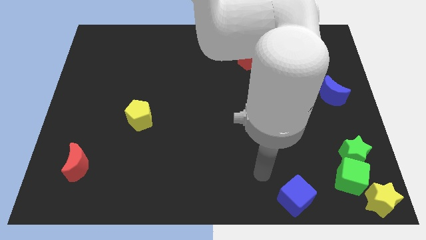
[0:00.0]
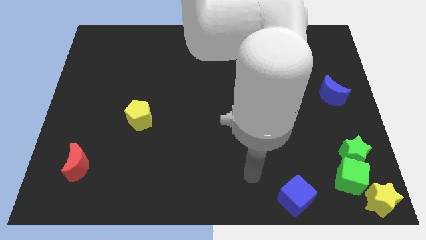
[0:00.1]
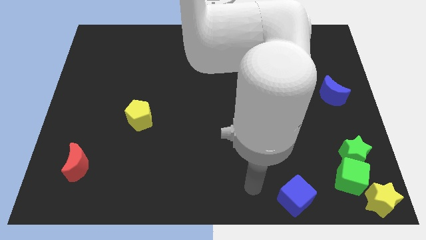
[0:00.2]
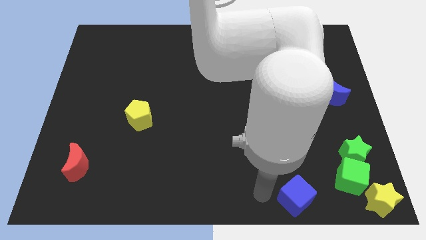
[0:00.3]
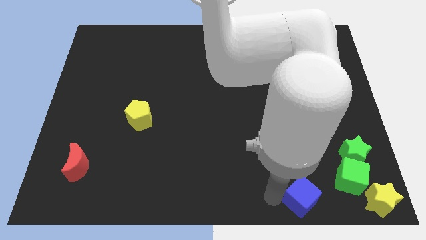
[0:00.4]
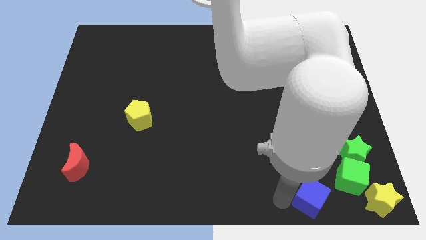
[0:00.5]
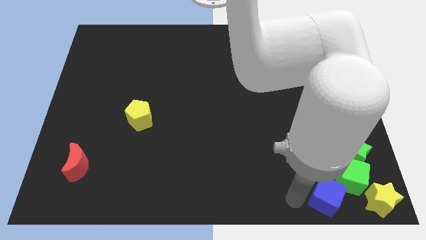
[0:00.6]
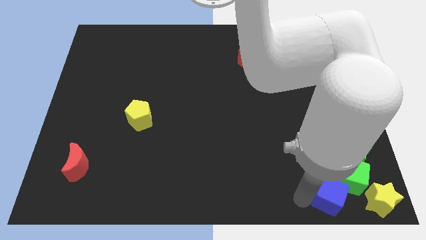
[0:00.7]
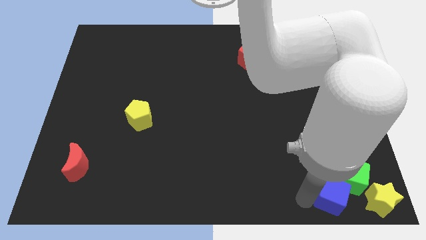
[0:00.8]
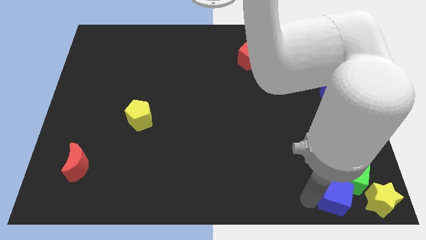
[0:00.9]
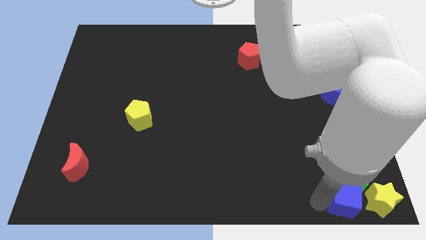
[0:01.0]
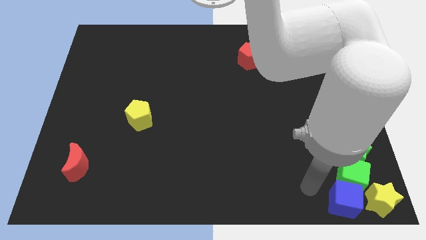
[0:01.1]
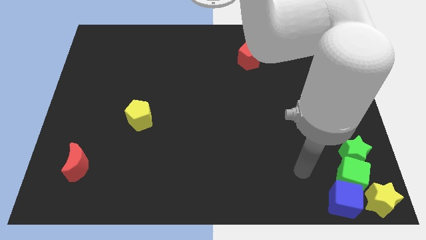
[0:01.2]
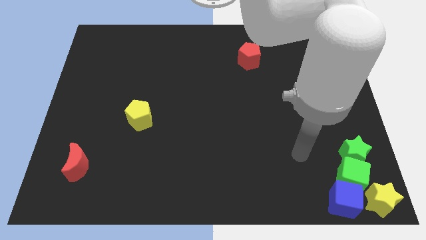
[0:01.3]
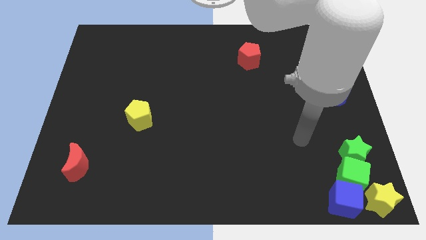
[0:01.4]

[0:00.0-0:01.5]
push the blue block into the group of obbjects

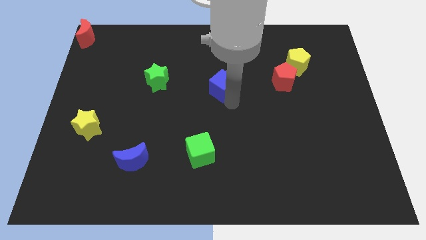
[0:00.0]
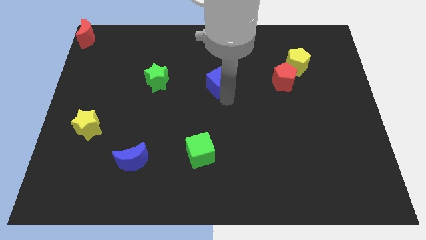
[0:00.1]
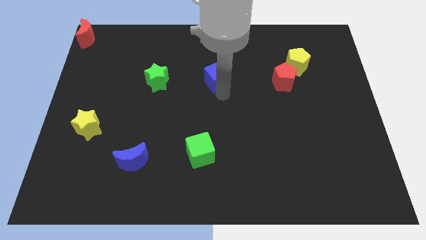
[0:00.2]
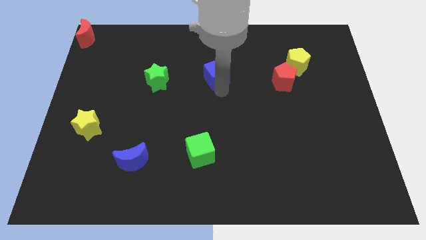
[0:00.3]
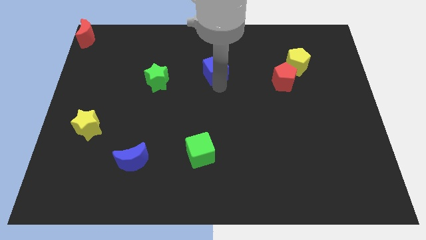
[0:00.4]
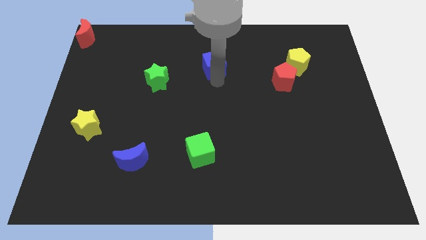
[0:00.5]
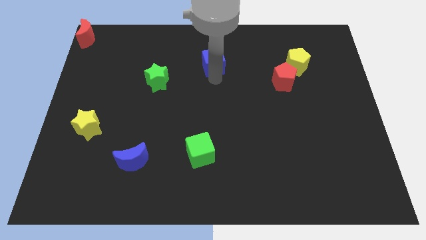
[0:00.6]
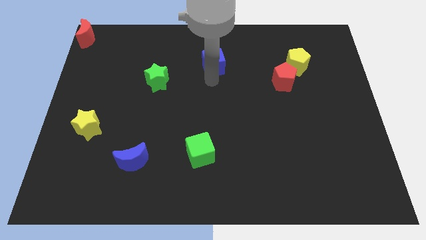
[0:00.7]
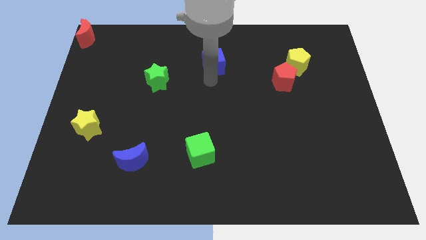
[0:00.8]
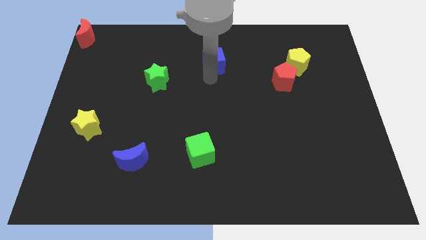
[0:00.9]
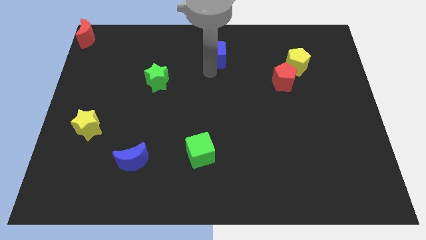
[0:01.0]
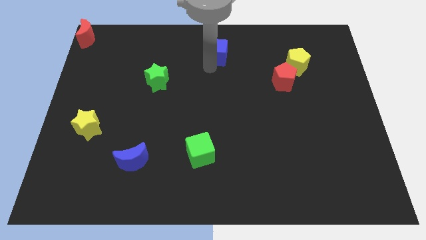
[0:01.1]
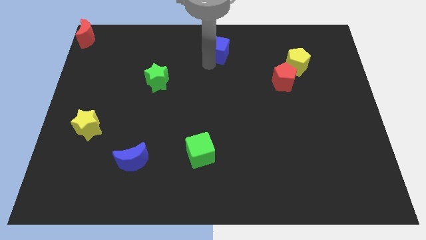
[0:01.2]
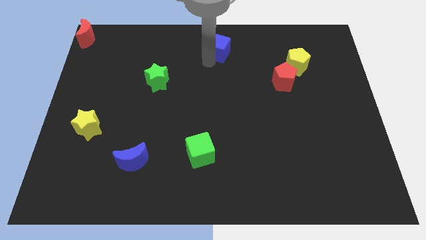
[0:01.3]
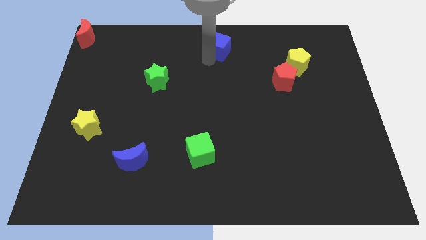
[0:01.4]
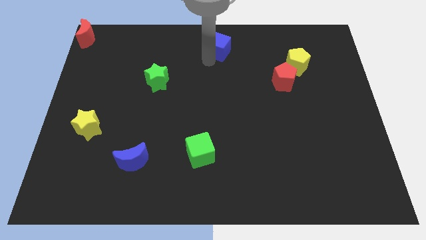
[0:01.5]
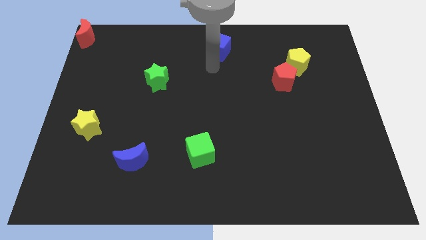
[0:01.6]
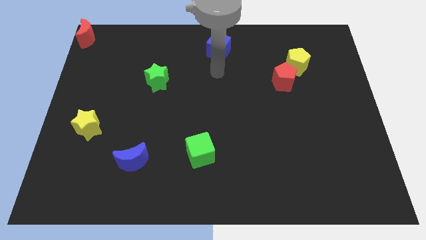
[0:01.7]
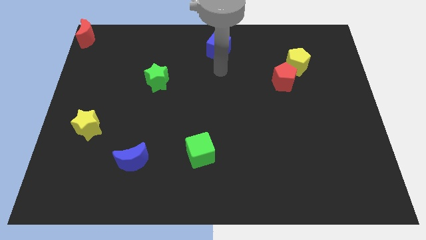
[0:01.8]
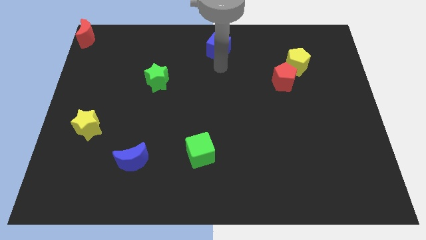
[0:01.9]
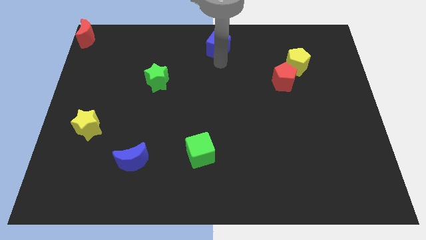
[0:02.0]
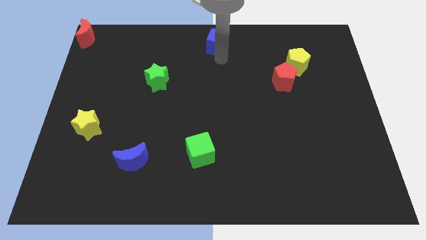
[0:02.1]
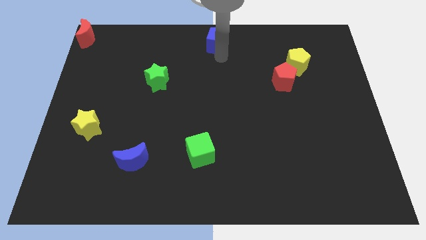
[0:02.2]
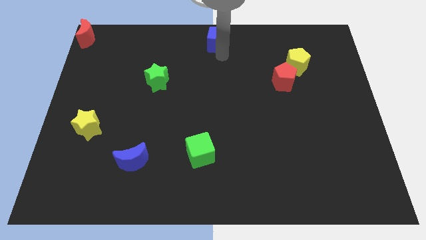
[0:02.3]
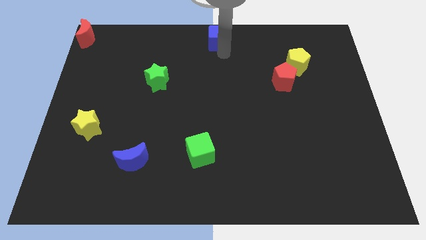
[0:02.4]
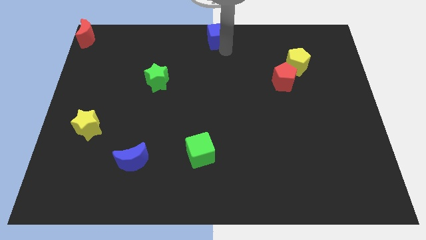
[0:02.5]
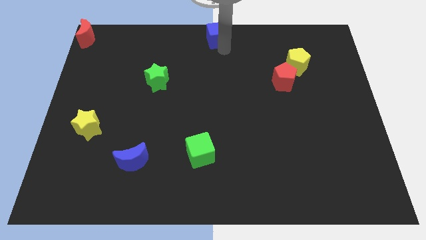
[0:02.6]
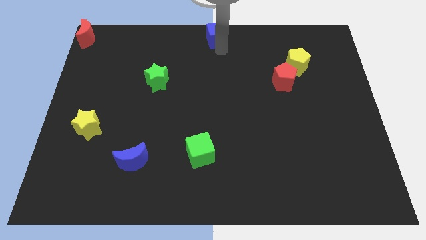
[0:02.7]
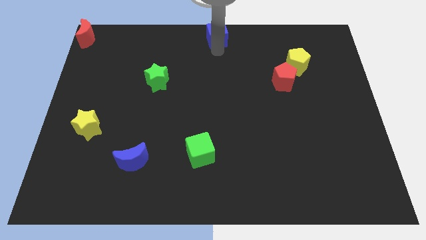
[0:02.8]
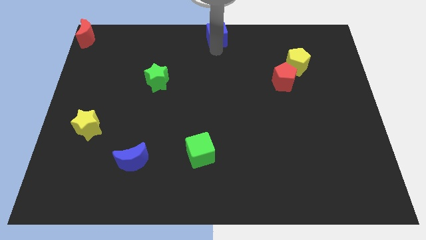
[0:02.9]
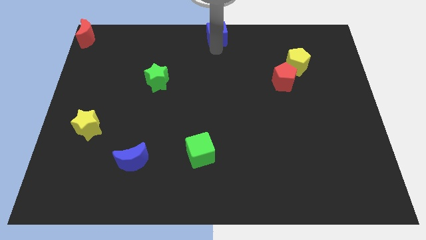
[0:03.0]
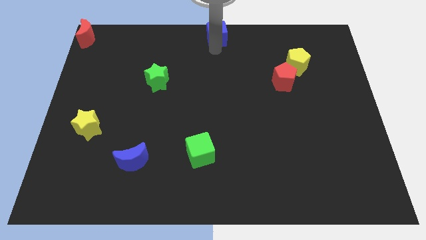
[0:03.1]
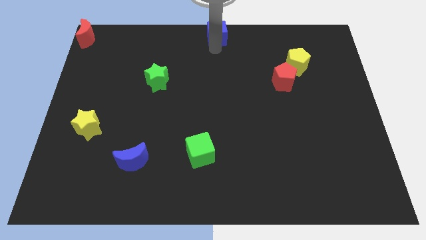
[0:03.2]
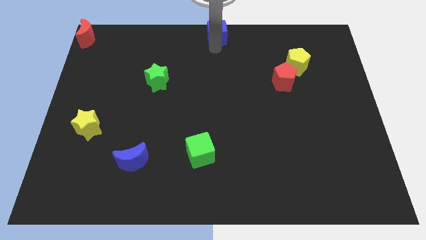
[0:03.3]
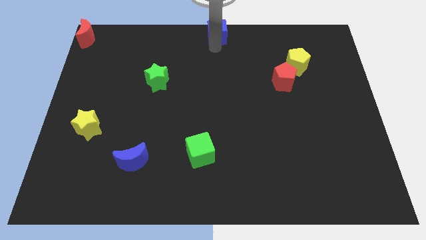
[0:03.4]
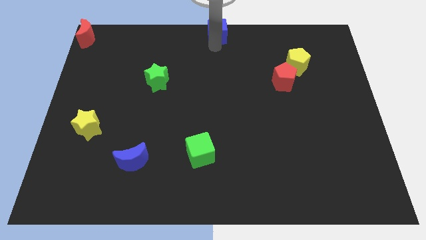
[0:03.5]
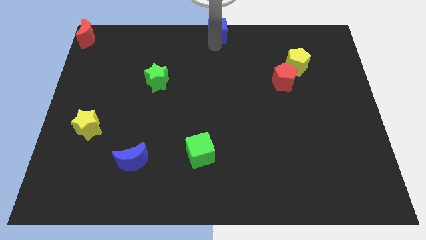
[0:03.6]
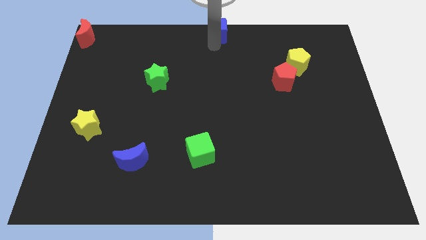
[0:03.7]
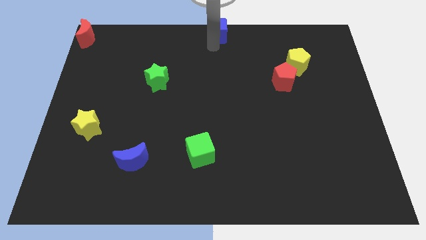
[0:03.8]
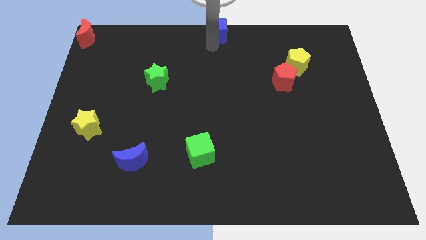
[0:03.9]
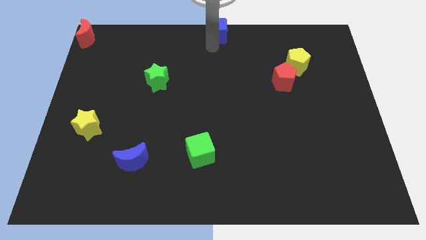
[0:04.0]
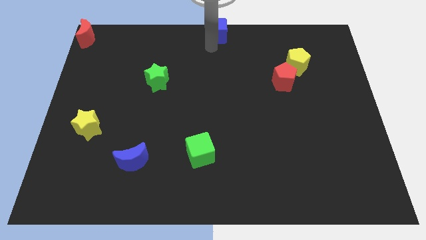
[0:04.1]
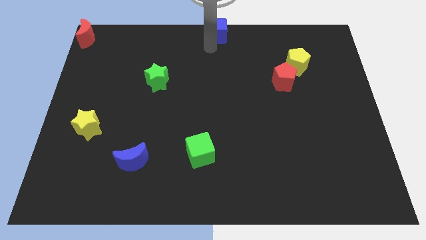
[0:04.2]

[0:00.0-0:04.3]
place the blue cube to the top center side

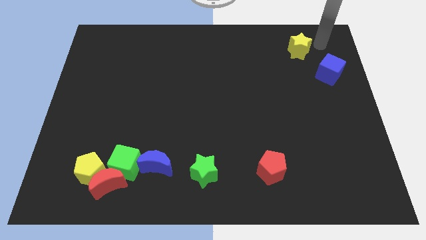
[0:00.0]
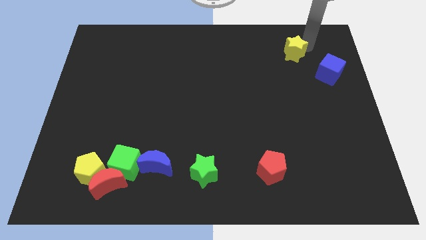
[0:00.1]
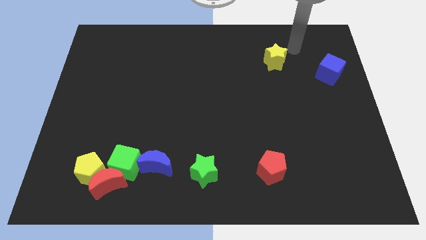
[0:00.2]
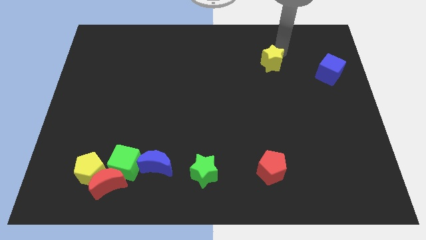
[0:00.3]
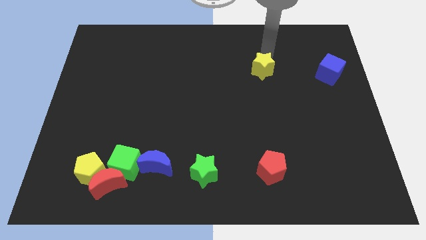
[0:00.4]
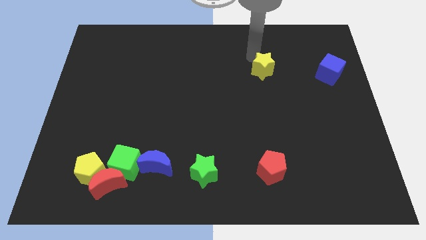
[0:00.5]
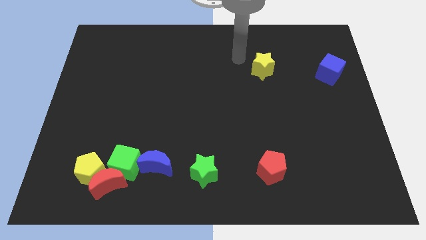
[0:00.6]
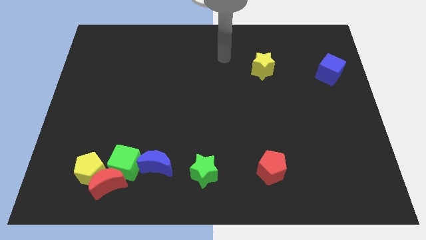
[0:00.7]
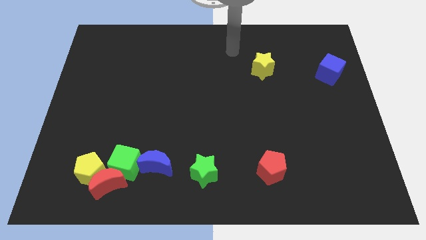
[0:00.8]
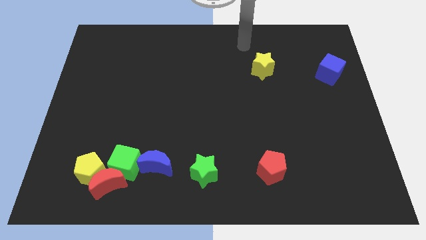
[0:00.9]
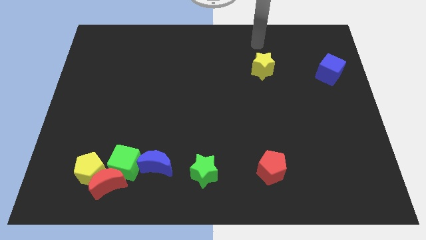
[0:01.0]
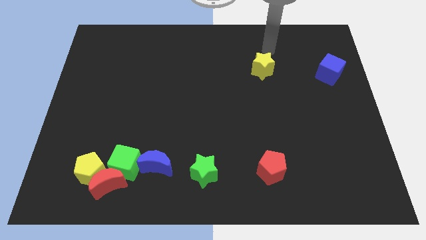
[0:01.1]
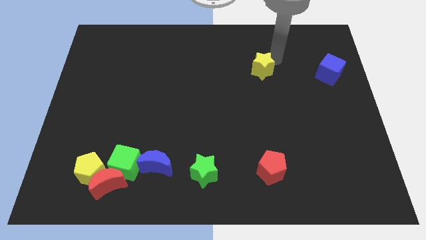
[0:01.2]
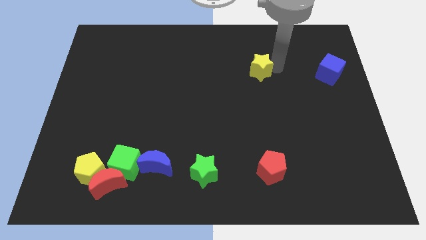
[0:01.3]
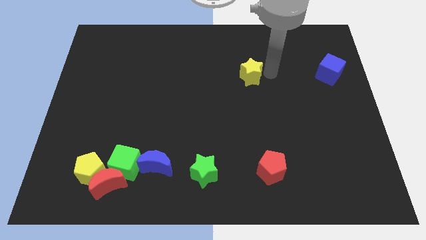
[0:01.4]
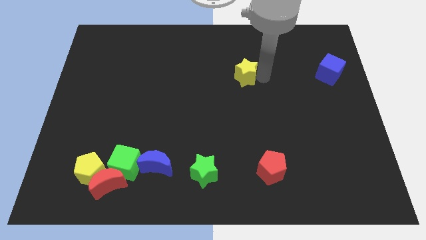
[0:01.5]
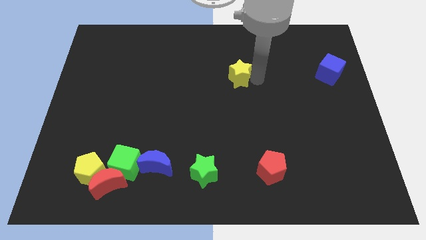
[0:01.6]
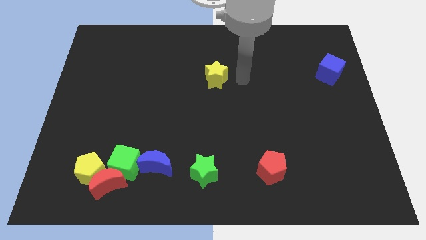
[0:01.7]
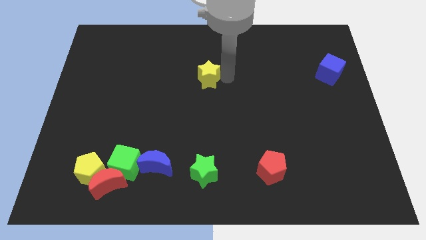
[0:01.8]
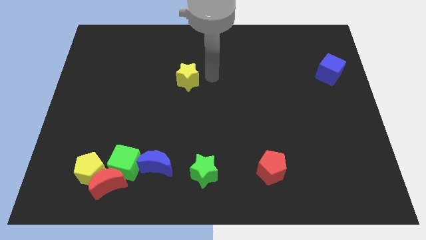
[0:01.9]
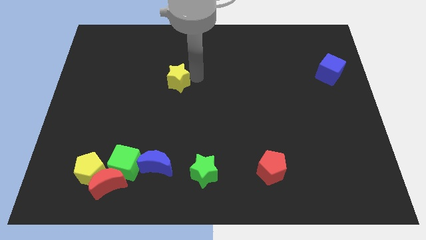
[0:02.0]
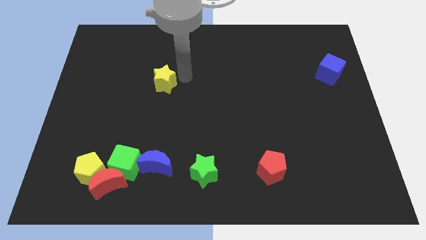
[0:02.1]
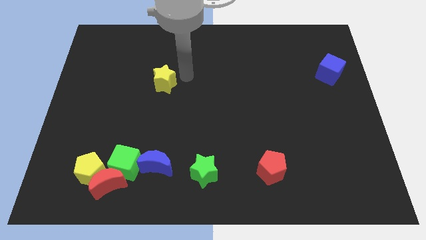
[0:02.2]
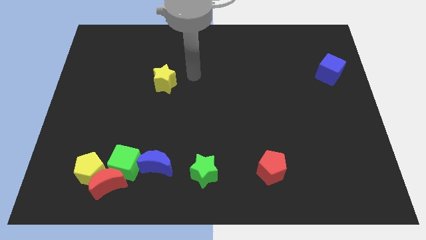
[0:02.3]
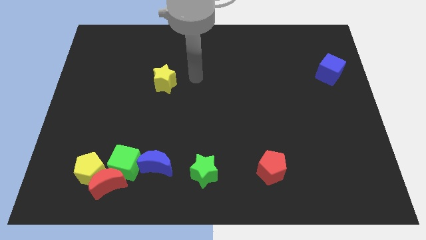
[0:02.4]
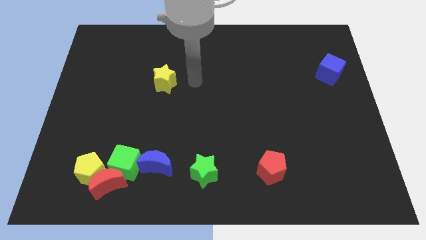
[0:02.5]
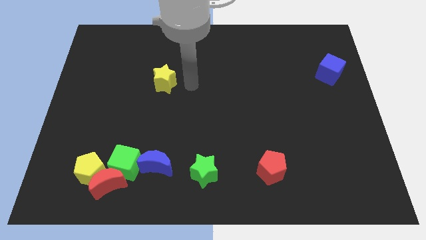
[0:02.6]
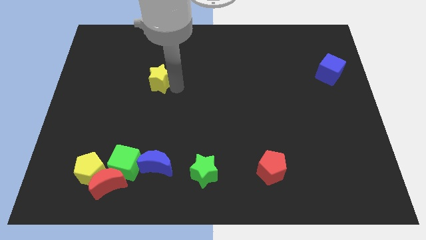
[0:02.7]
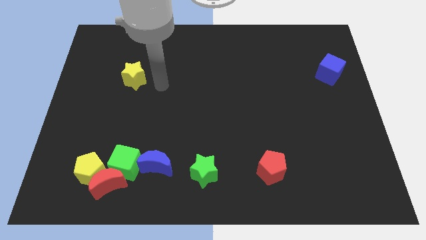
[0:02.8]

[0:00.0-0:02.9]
place the yellow star above the green cube

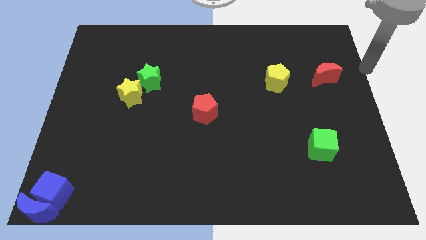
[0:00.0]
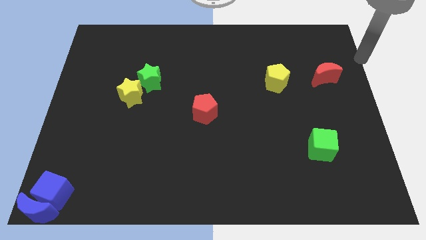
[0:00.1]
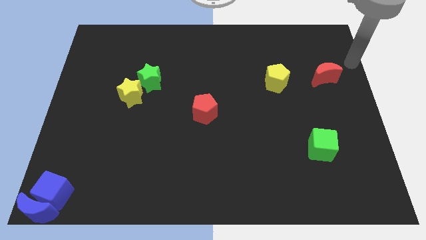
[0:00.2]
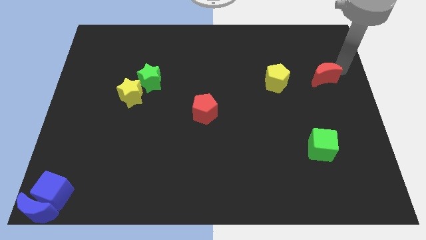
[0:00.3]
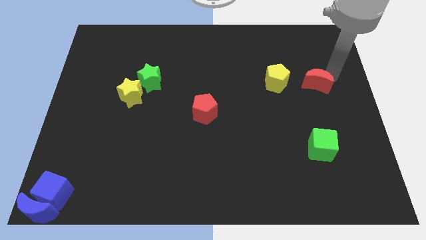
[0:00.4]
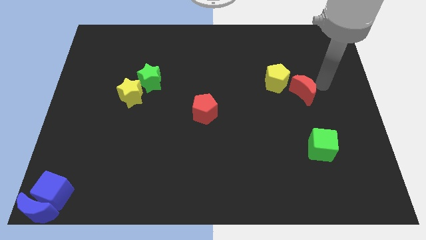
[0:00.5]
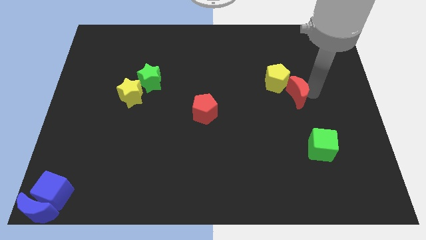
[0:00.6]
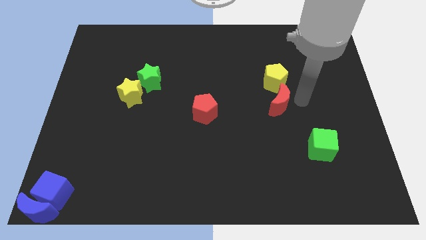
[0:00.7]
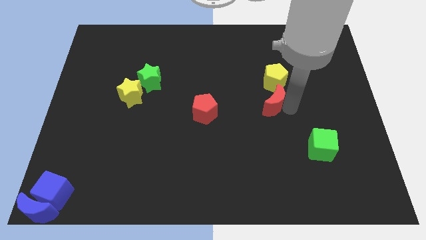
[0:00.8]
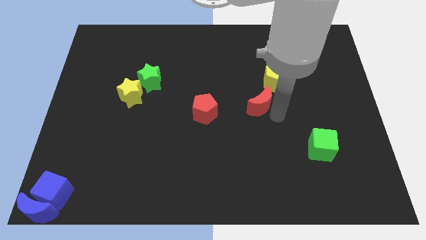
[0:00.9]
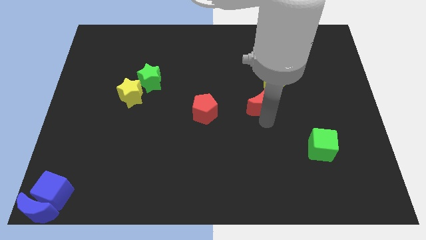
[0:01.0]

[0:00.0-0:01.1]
slide red moon to the right of red pentagon
